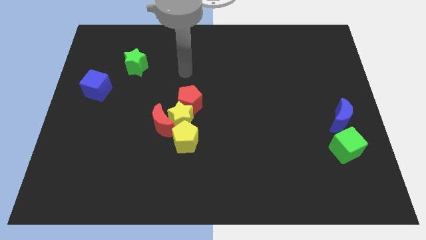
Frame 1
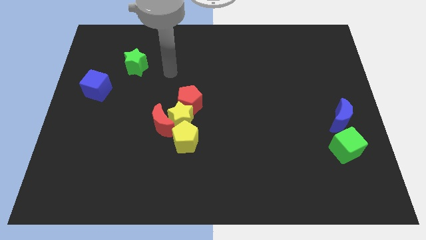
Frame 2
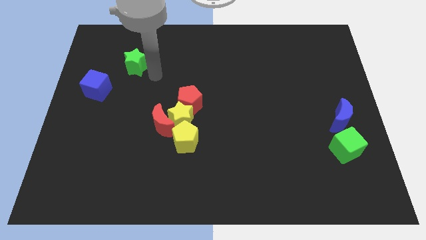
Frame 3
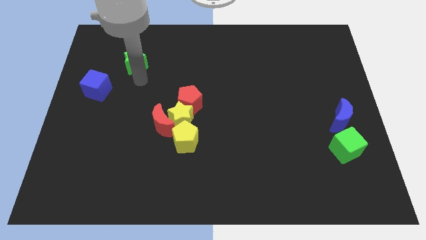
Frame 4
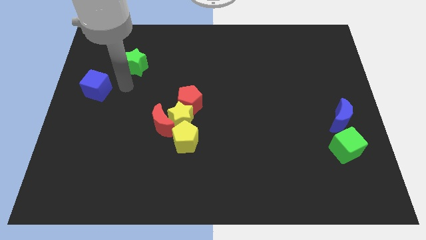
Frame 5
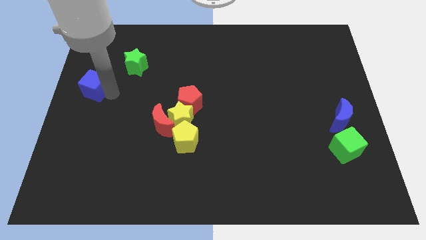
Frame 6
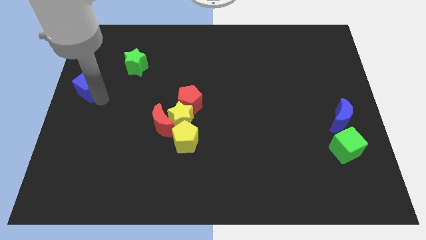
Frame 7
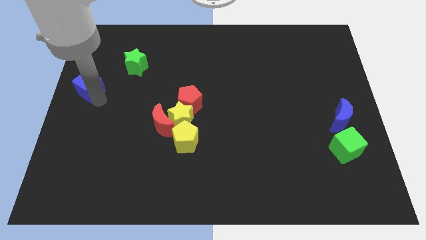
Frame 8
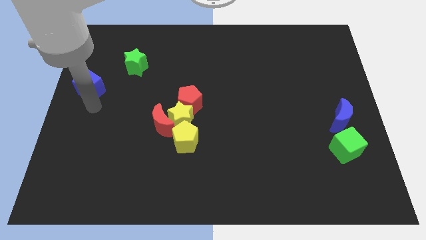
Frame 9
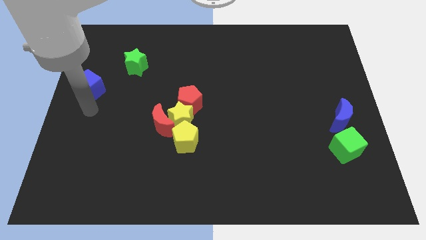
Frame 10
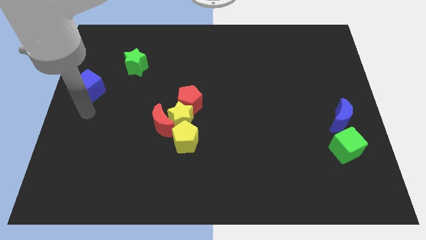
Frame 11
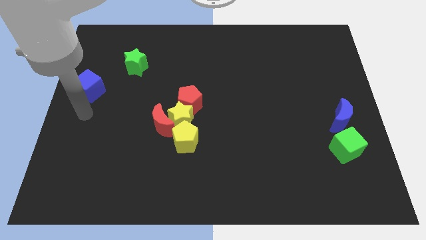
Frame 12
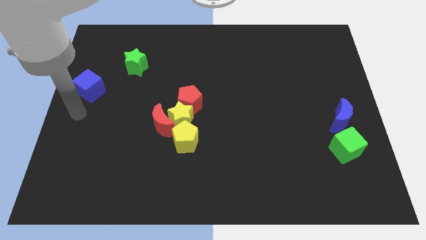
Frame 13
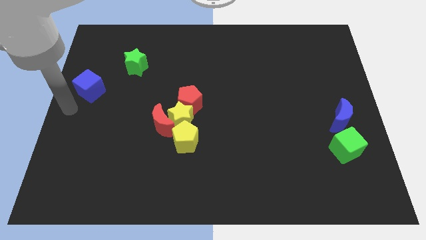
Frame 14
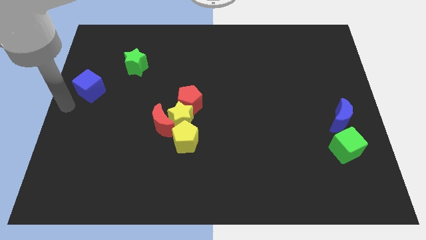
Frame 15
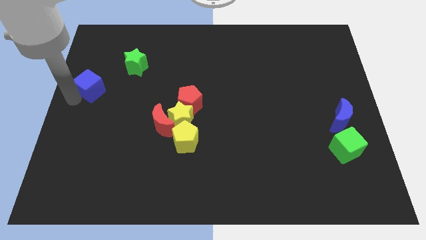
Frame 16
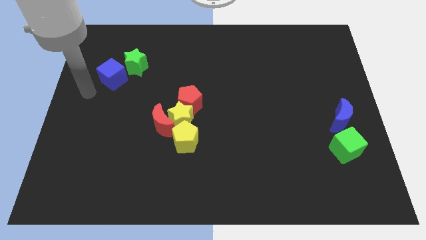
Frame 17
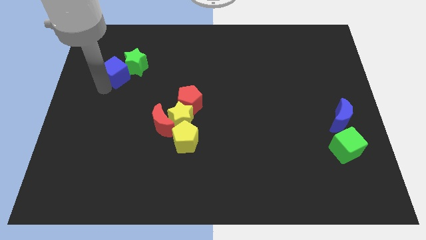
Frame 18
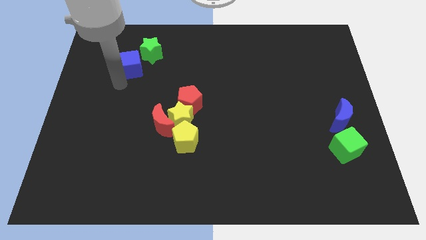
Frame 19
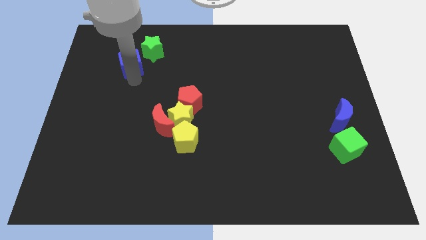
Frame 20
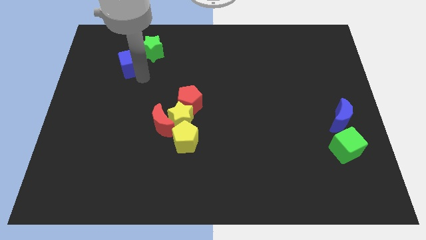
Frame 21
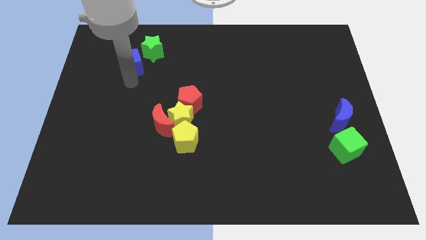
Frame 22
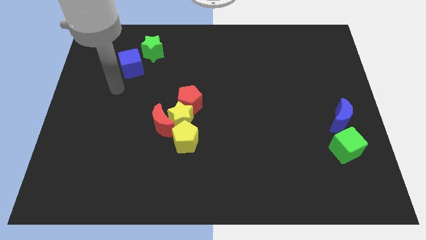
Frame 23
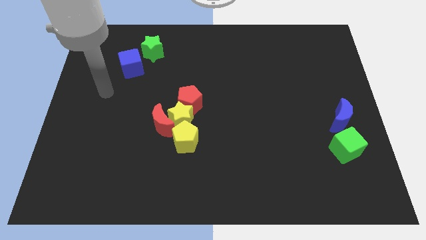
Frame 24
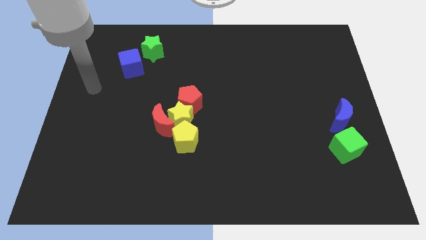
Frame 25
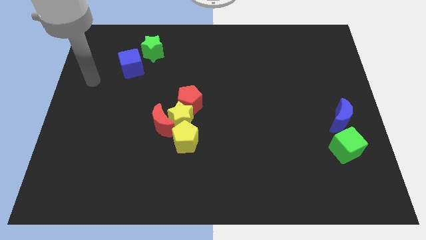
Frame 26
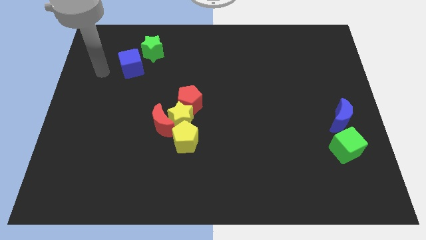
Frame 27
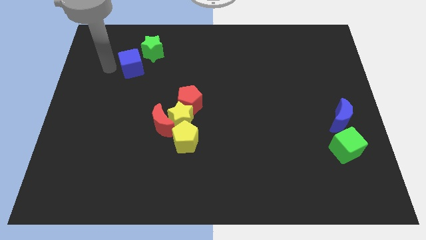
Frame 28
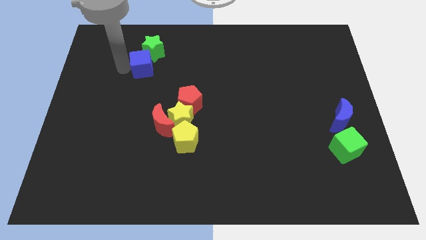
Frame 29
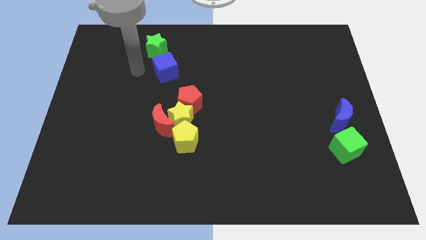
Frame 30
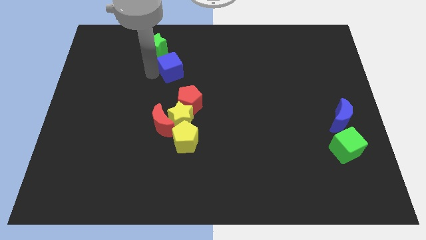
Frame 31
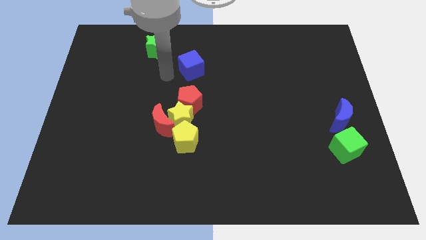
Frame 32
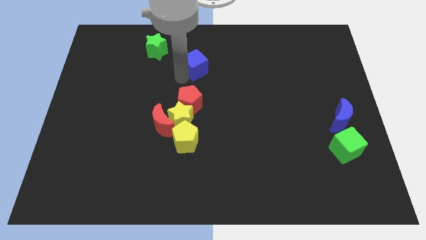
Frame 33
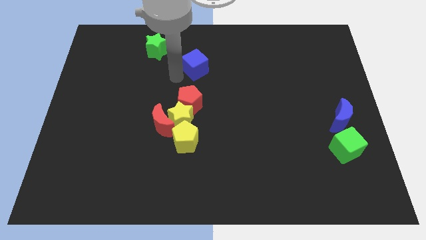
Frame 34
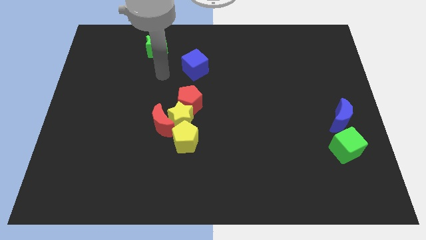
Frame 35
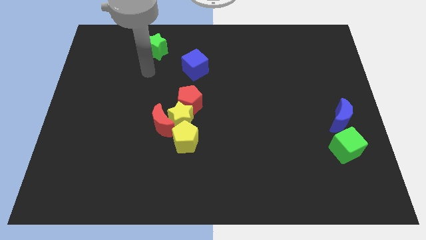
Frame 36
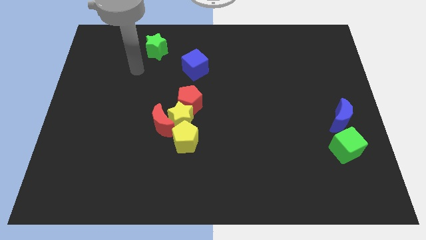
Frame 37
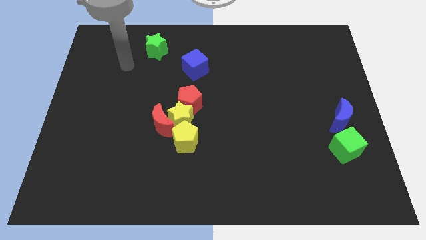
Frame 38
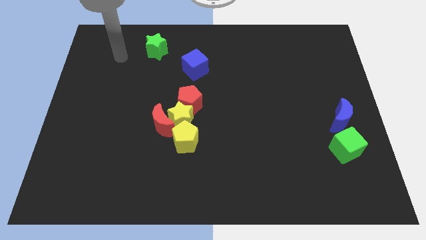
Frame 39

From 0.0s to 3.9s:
put the blue cube vertically above the red pentagon

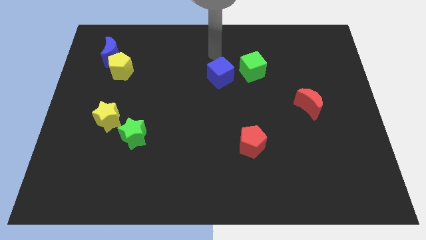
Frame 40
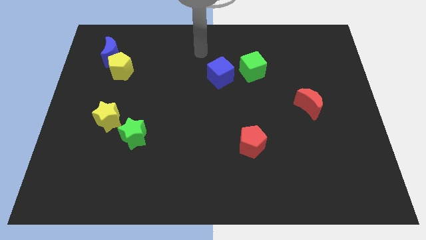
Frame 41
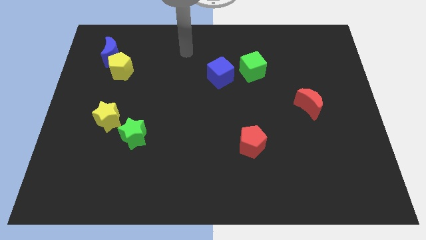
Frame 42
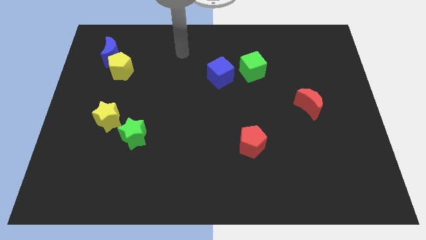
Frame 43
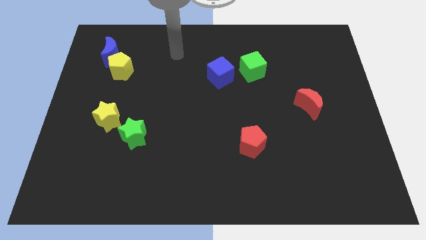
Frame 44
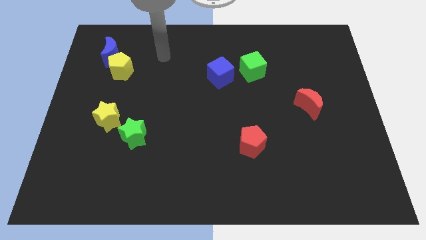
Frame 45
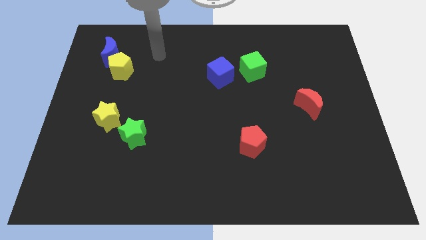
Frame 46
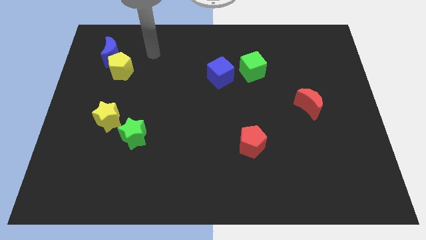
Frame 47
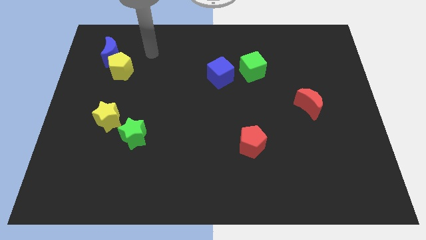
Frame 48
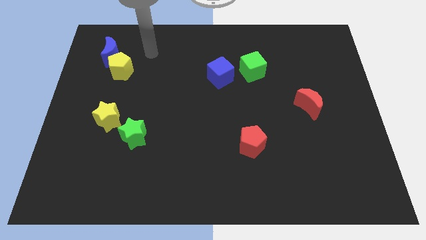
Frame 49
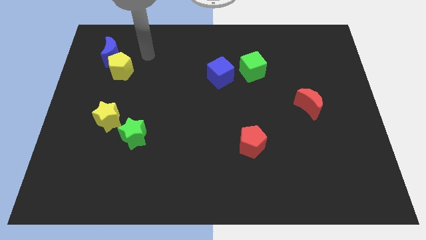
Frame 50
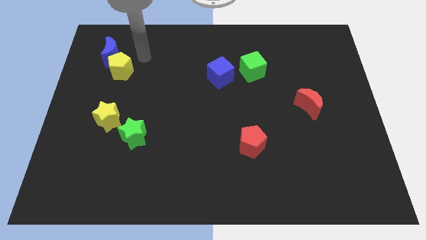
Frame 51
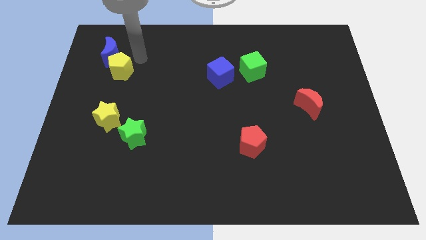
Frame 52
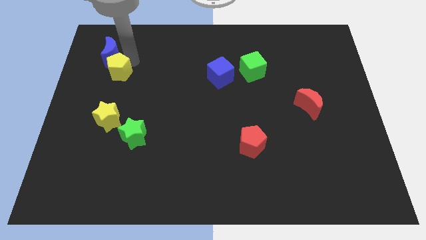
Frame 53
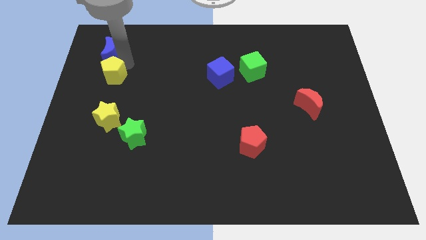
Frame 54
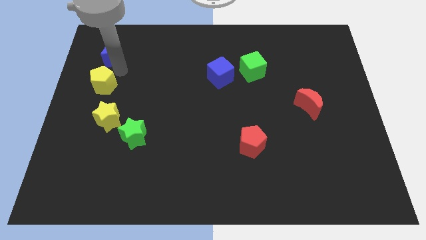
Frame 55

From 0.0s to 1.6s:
push the yellow pentagon to the bottom of the blue crescent

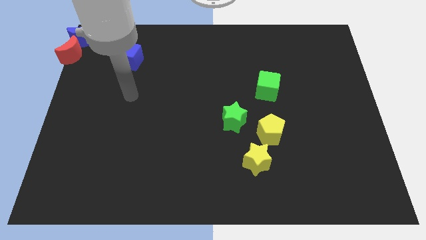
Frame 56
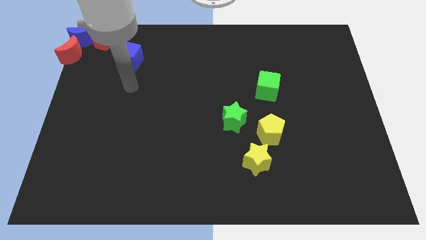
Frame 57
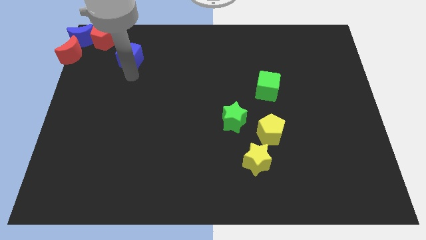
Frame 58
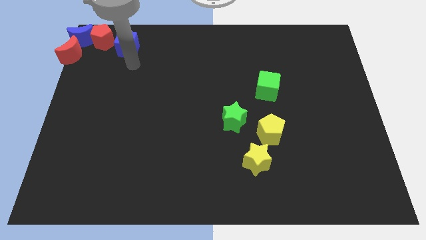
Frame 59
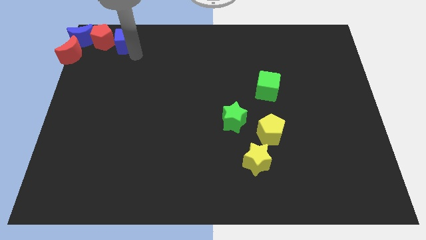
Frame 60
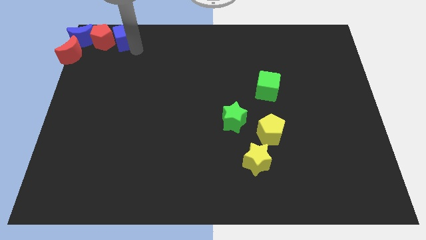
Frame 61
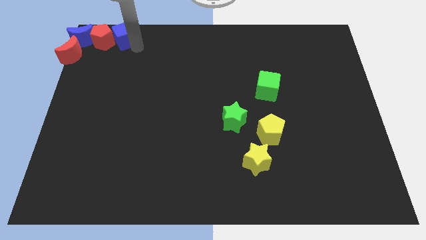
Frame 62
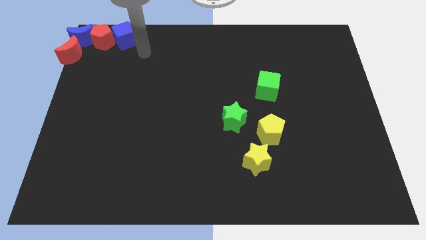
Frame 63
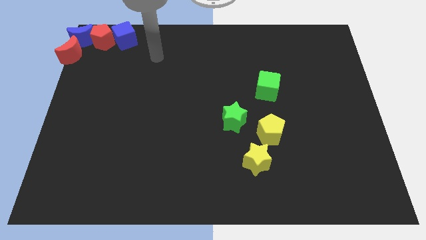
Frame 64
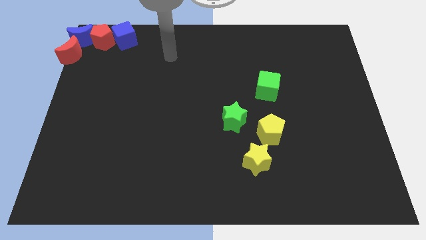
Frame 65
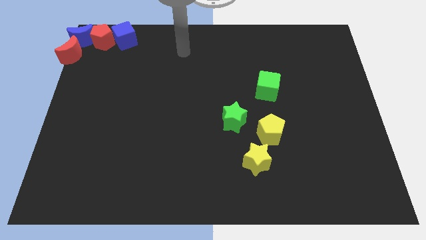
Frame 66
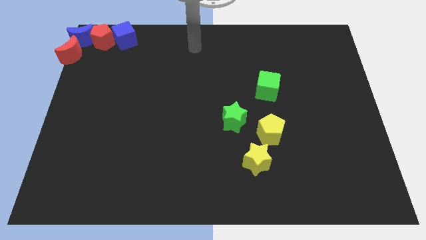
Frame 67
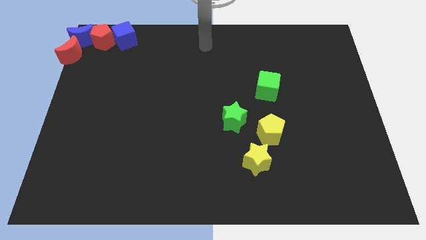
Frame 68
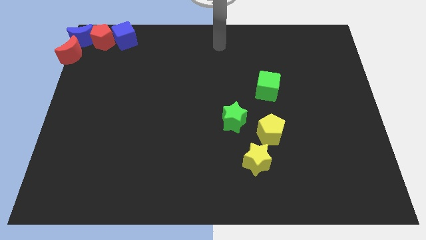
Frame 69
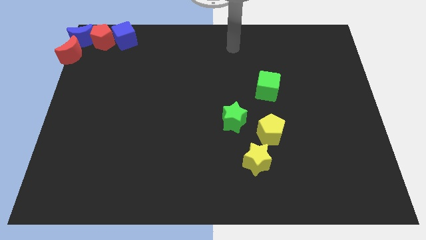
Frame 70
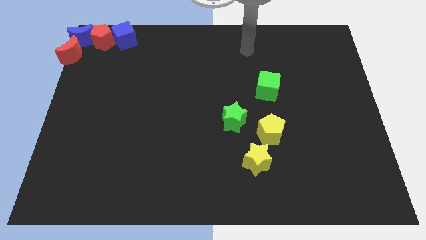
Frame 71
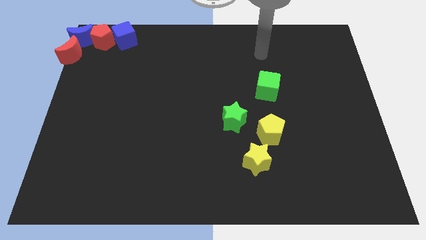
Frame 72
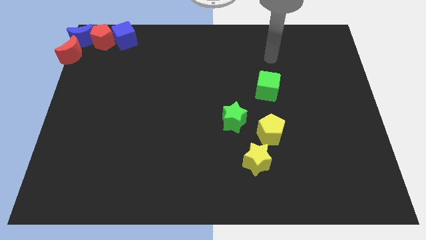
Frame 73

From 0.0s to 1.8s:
move the blue cube beside the red pentagon

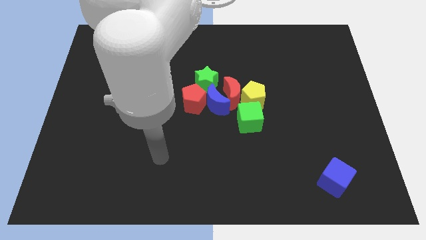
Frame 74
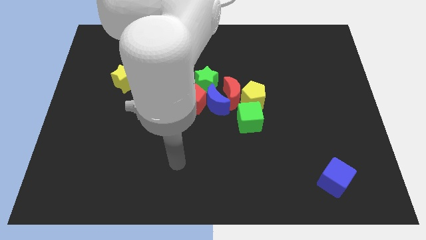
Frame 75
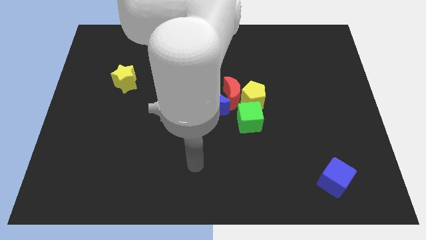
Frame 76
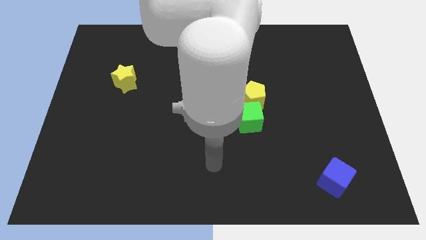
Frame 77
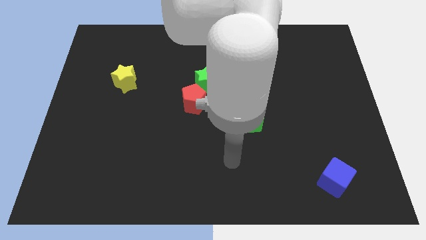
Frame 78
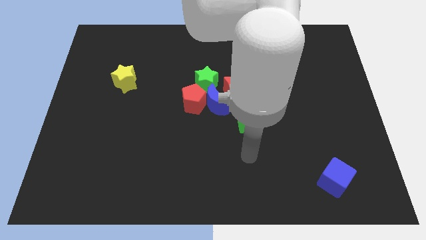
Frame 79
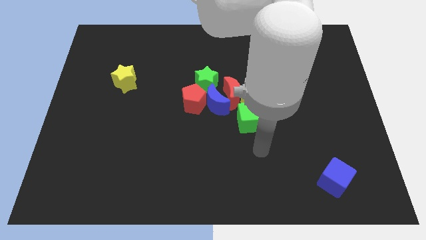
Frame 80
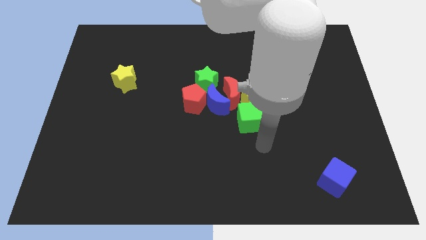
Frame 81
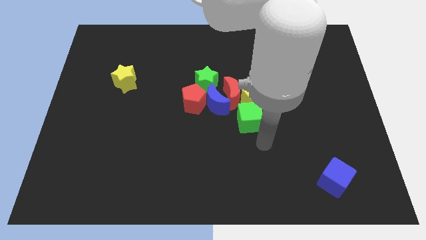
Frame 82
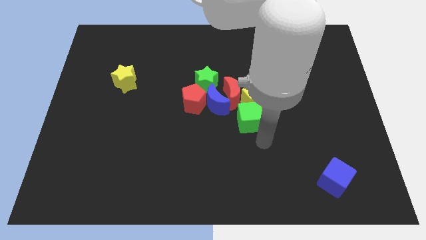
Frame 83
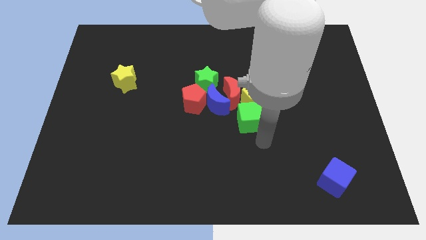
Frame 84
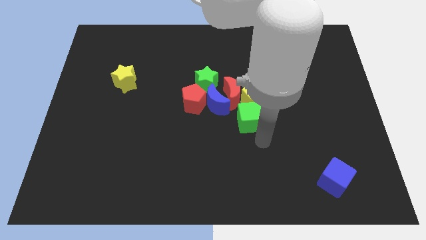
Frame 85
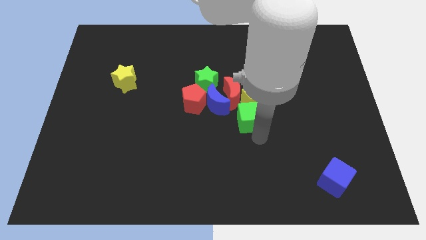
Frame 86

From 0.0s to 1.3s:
place your arm at the bottom of the green cube

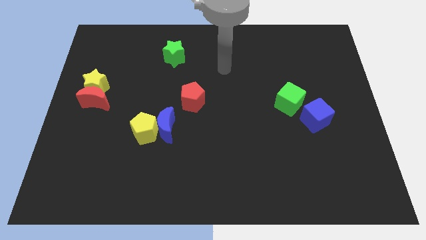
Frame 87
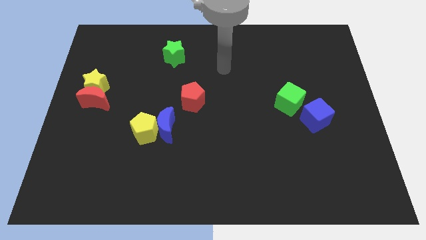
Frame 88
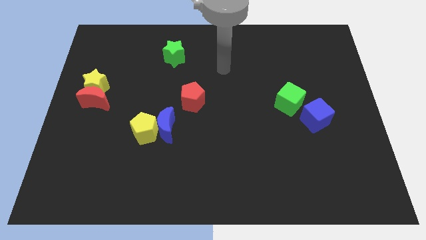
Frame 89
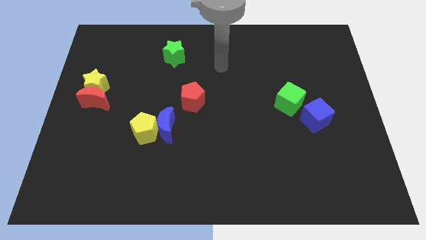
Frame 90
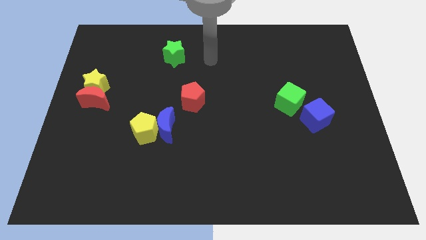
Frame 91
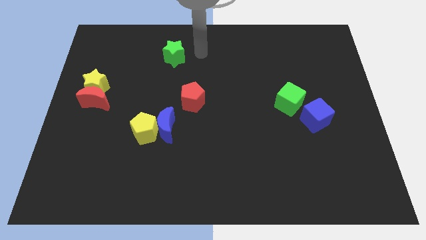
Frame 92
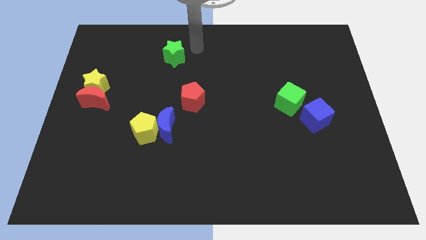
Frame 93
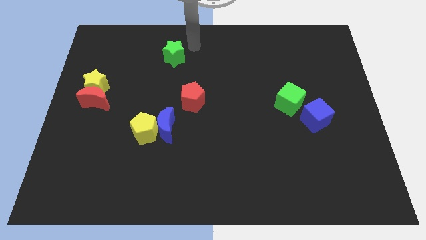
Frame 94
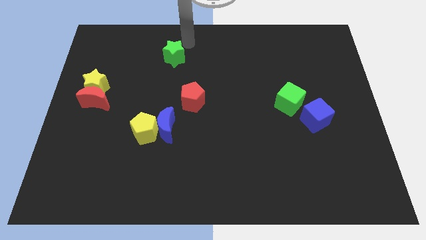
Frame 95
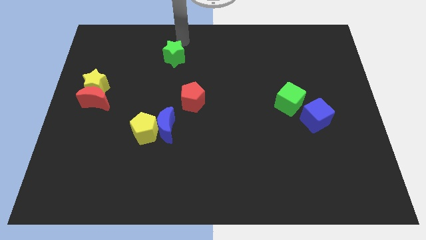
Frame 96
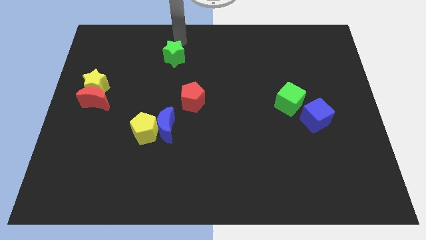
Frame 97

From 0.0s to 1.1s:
push your arm at the top of the green star
